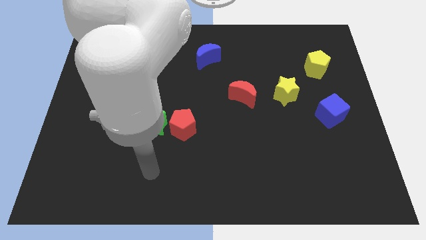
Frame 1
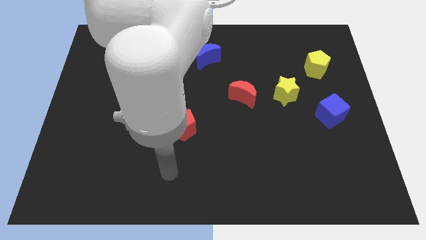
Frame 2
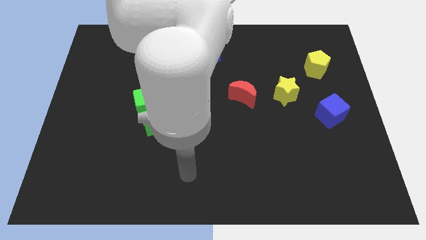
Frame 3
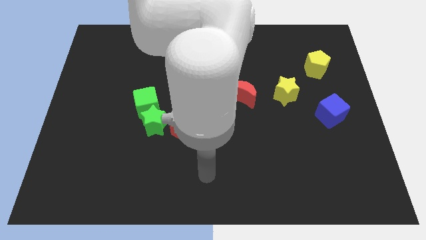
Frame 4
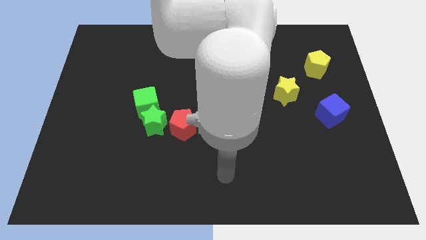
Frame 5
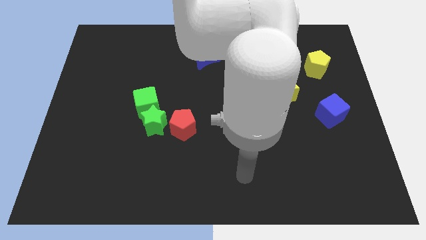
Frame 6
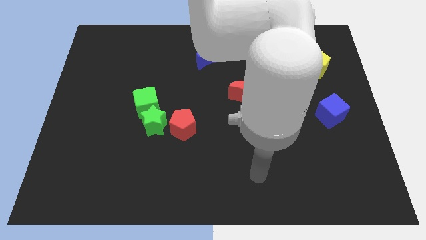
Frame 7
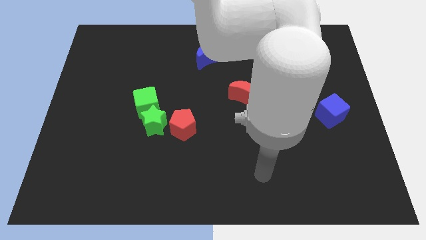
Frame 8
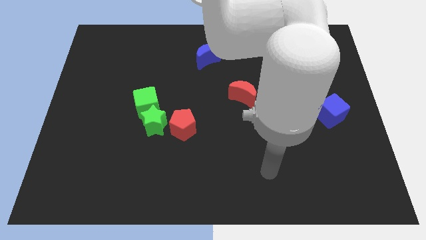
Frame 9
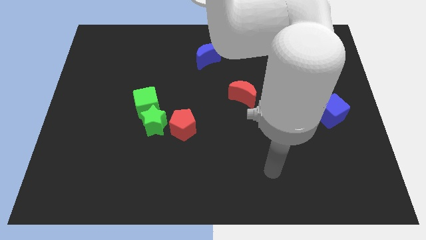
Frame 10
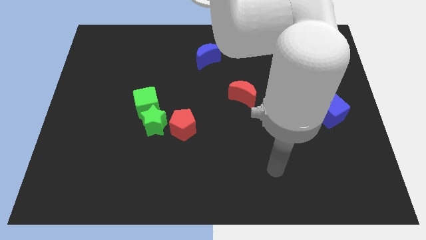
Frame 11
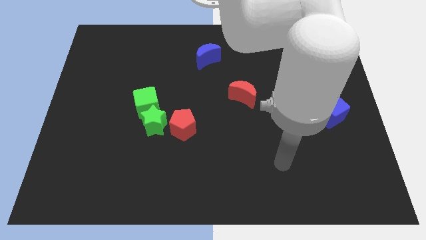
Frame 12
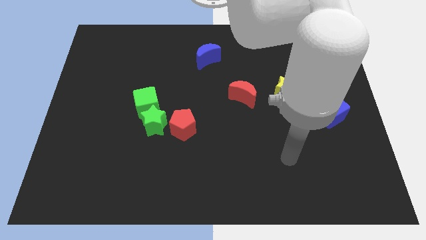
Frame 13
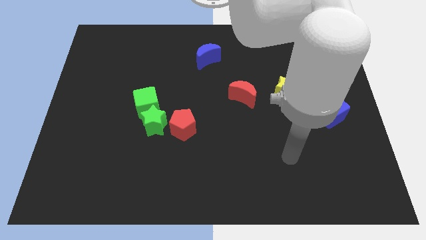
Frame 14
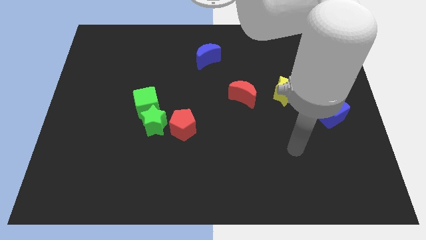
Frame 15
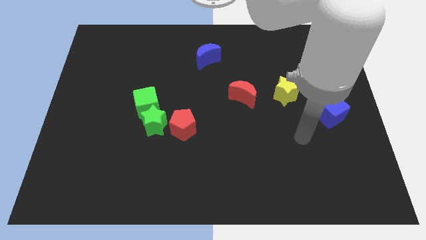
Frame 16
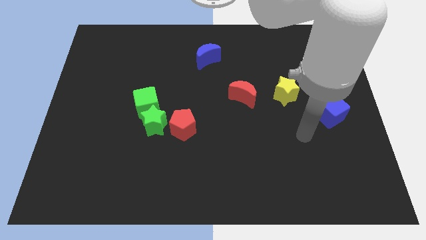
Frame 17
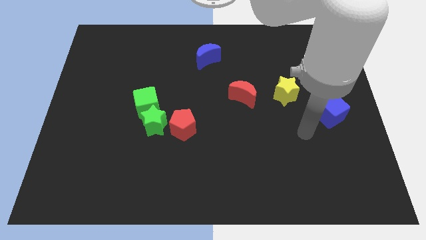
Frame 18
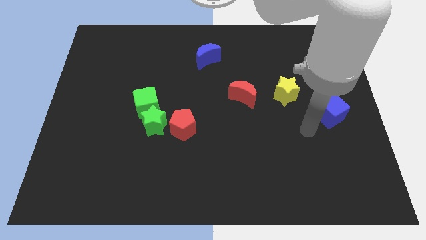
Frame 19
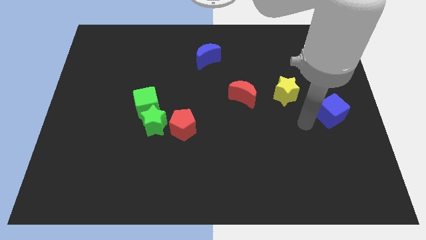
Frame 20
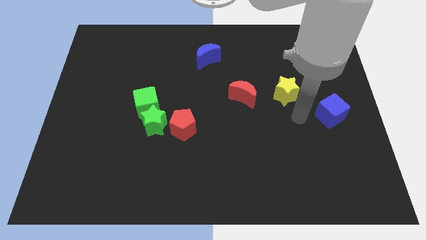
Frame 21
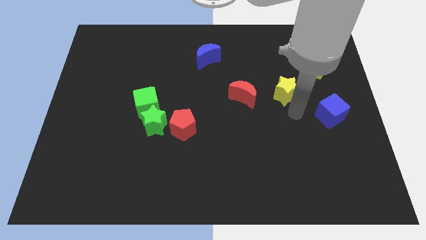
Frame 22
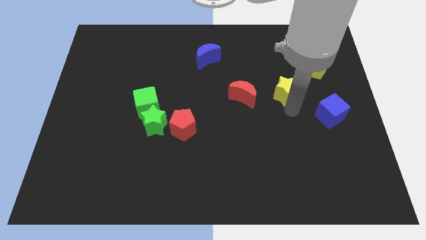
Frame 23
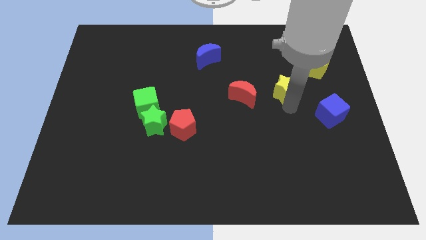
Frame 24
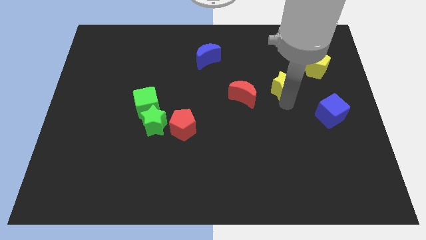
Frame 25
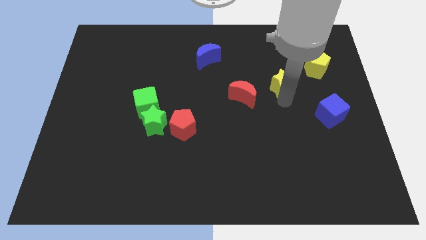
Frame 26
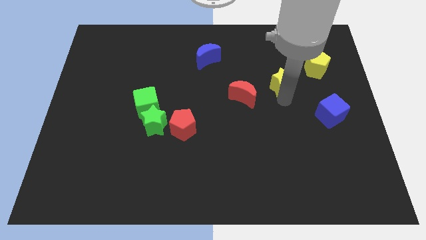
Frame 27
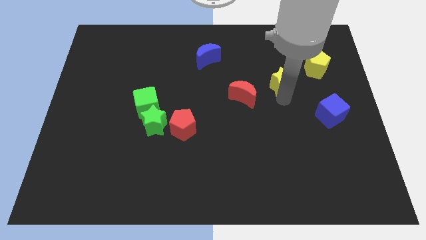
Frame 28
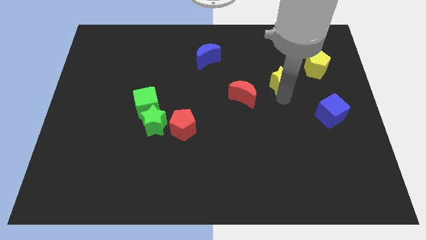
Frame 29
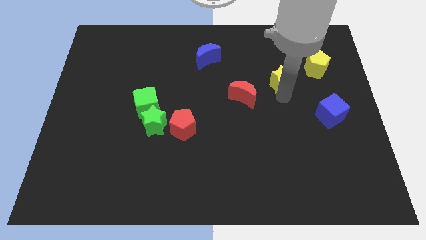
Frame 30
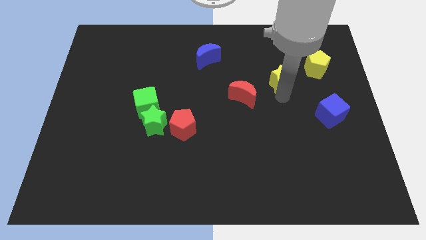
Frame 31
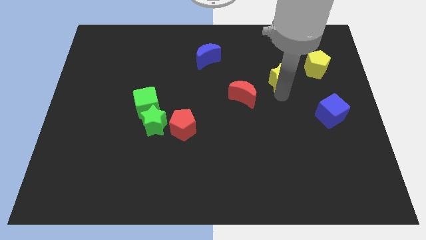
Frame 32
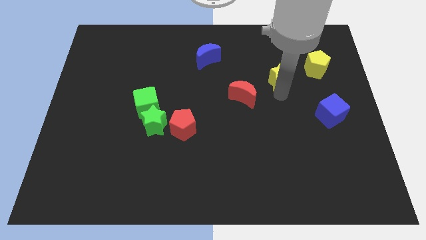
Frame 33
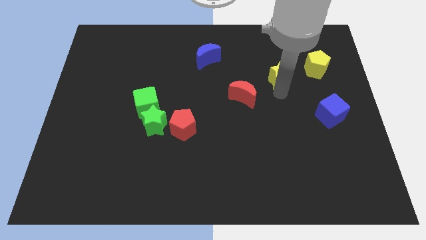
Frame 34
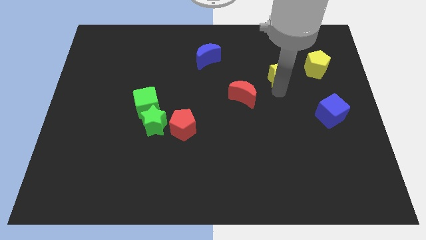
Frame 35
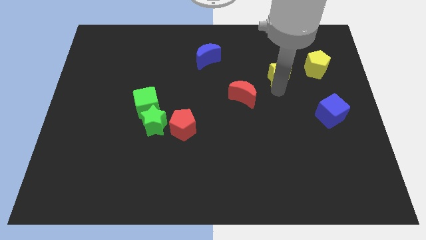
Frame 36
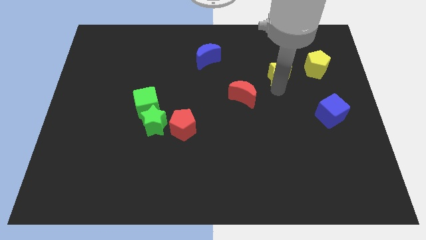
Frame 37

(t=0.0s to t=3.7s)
place the yellow star diagonally top right to the red moon

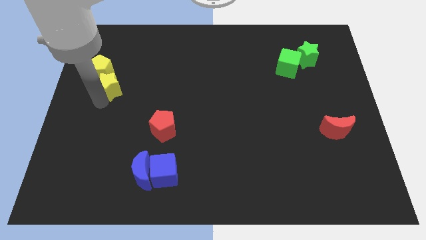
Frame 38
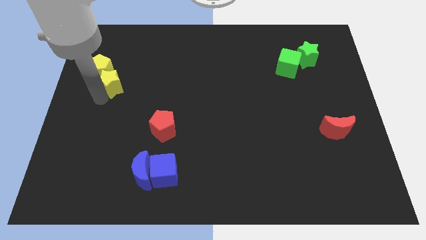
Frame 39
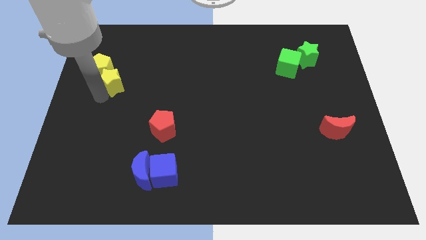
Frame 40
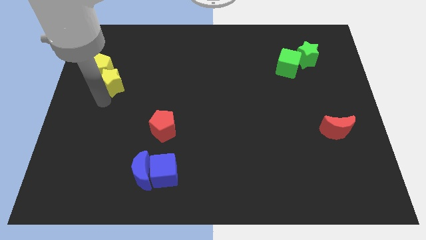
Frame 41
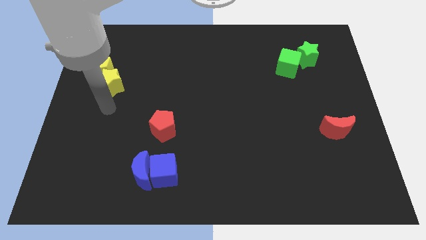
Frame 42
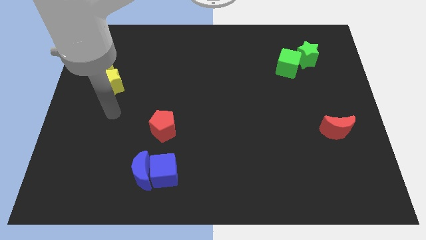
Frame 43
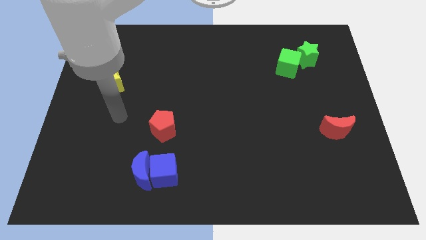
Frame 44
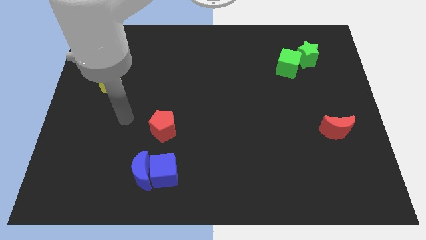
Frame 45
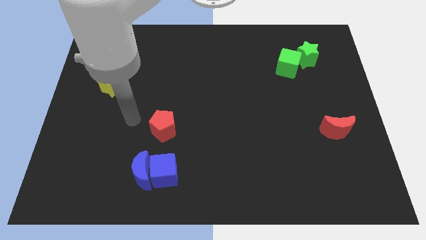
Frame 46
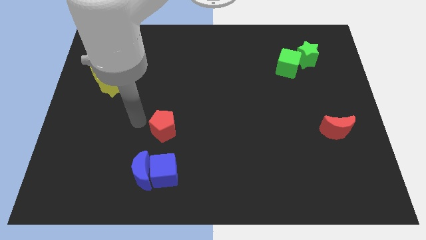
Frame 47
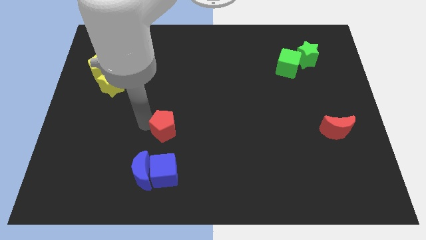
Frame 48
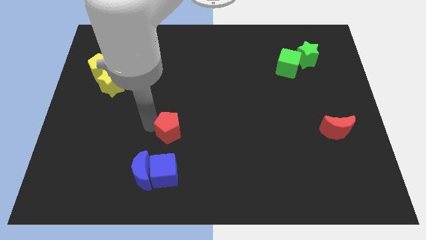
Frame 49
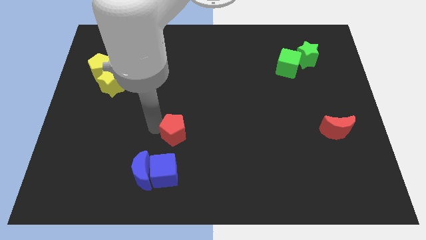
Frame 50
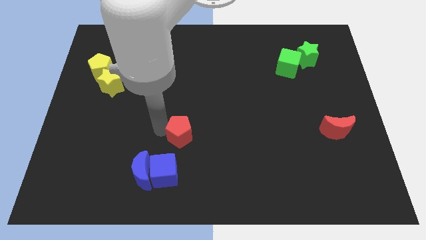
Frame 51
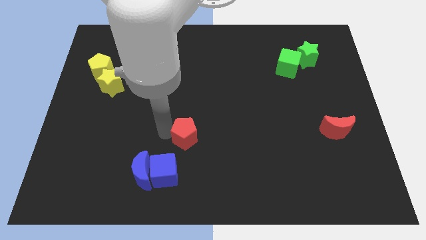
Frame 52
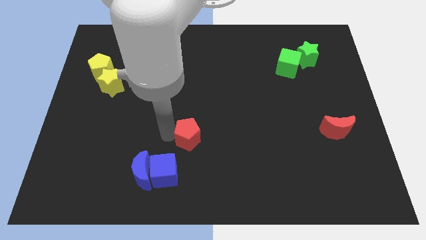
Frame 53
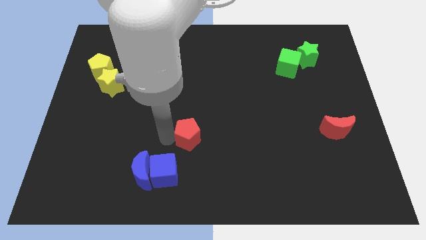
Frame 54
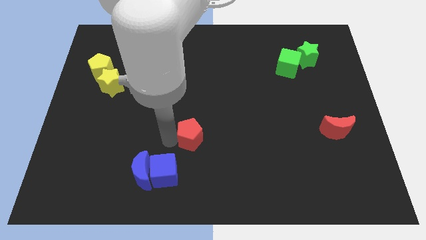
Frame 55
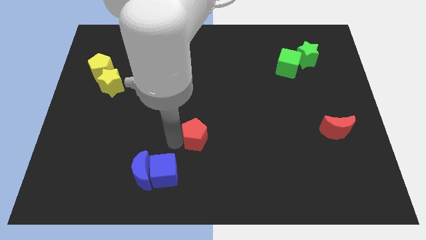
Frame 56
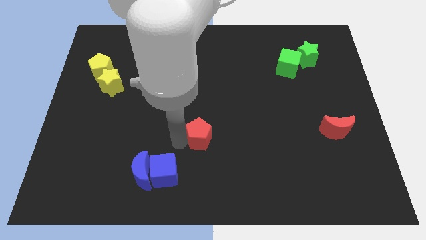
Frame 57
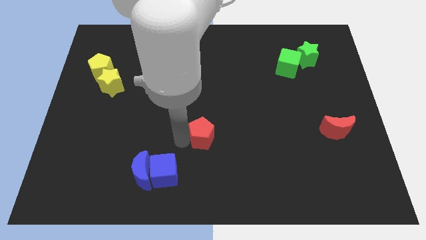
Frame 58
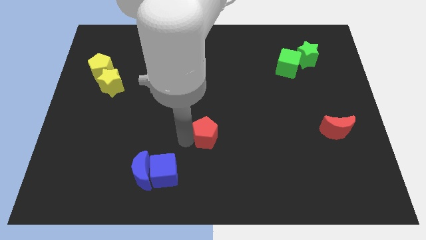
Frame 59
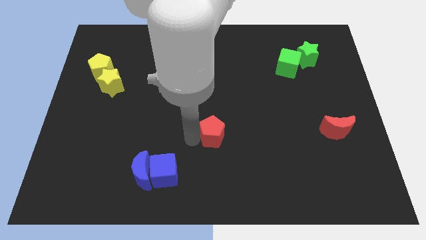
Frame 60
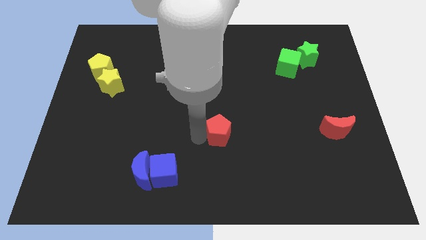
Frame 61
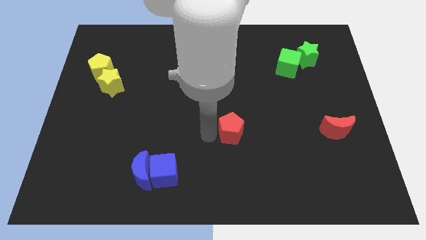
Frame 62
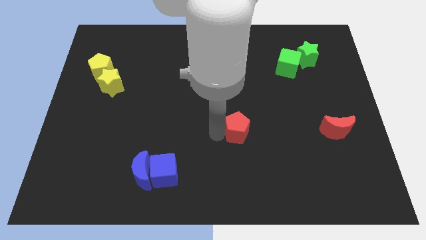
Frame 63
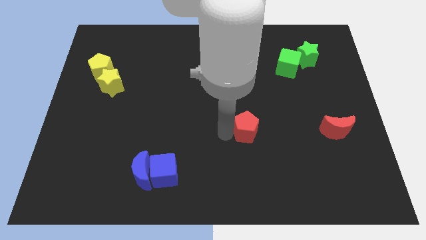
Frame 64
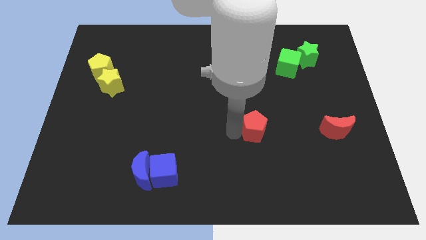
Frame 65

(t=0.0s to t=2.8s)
move the red pentagon horizontally to the left of the red moon

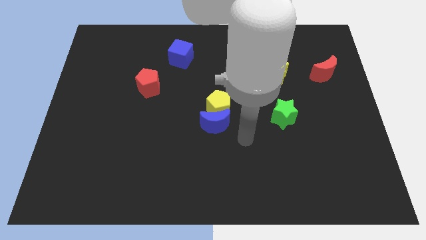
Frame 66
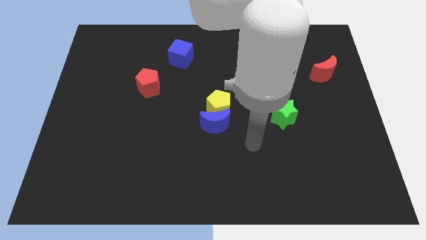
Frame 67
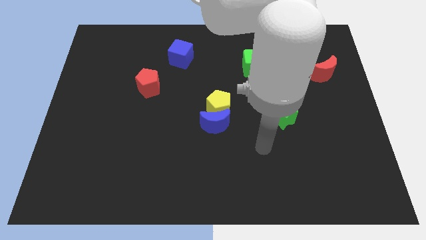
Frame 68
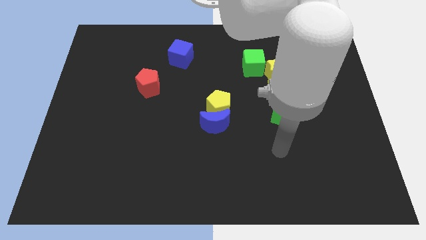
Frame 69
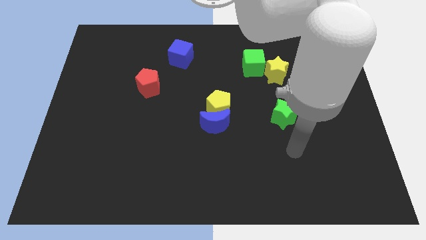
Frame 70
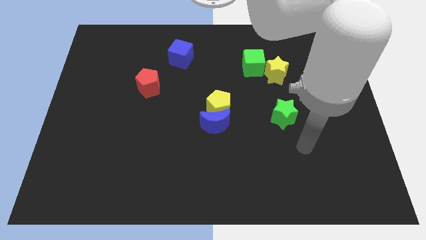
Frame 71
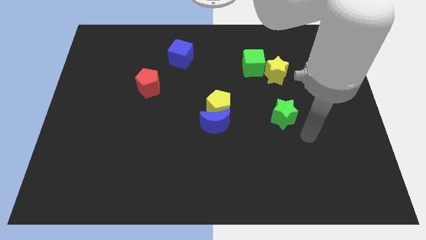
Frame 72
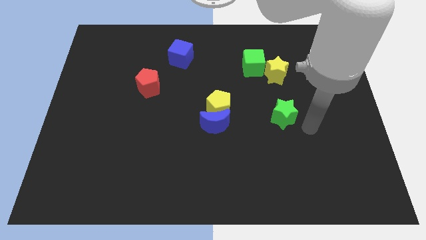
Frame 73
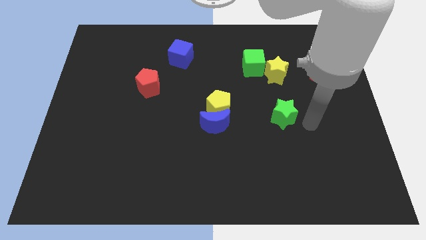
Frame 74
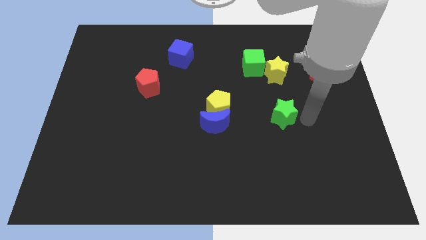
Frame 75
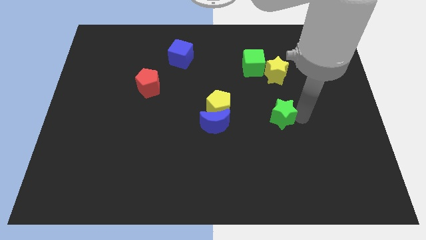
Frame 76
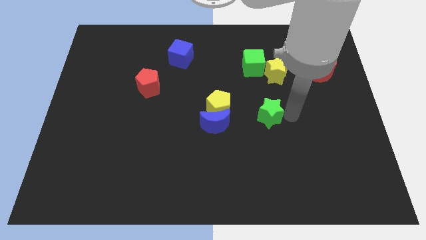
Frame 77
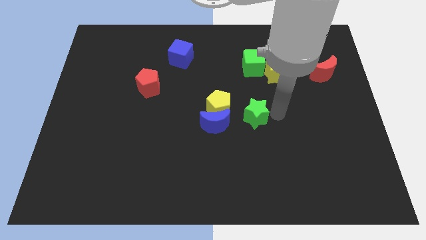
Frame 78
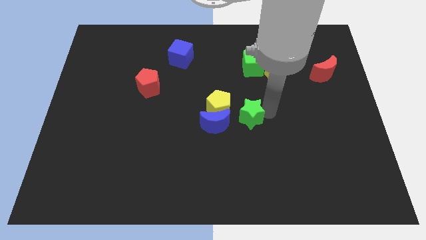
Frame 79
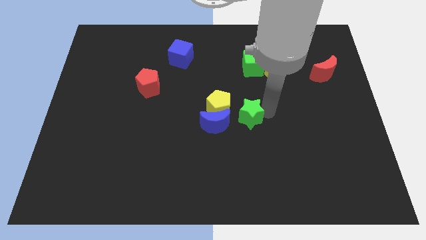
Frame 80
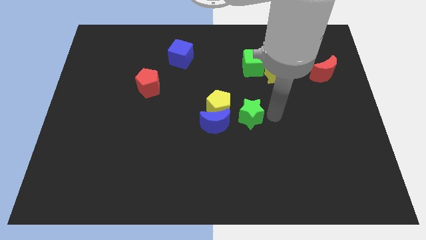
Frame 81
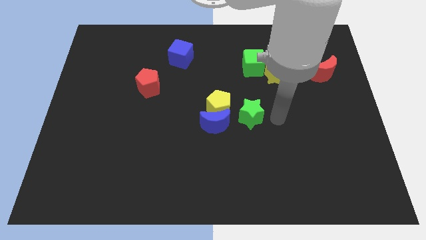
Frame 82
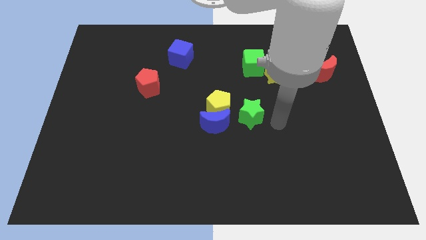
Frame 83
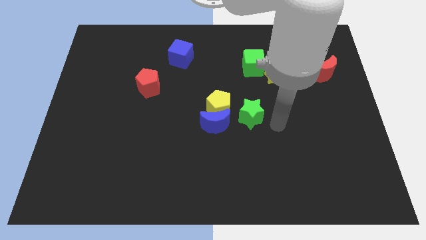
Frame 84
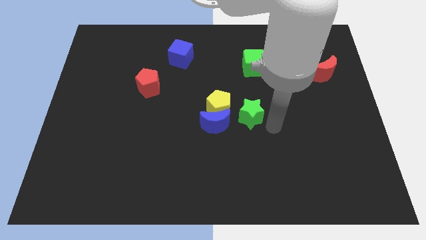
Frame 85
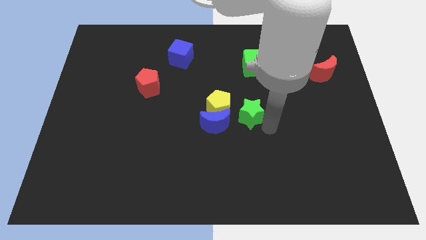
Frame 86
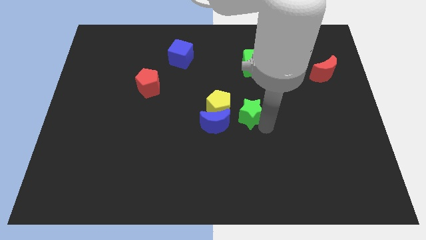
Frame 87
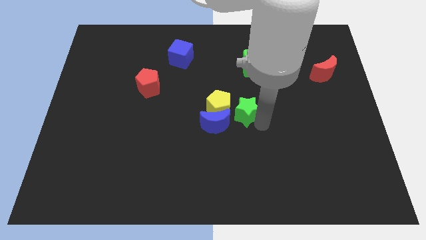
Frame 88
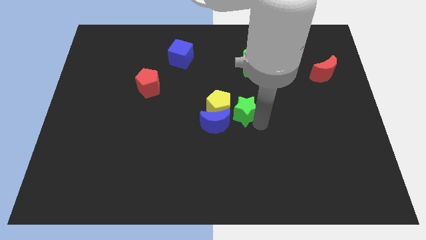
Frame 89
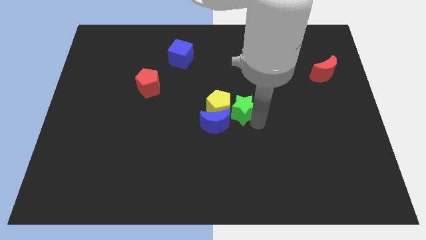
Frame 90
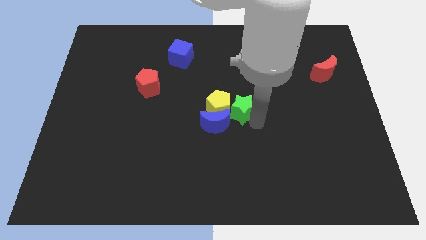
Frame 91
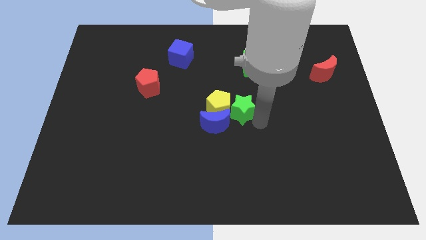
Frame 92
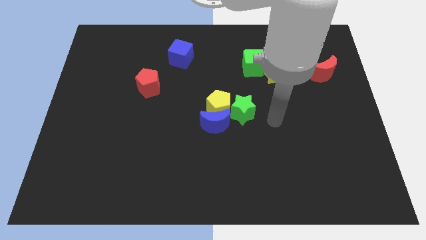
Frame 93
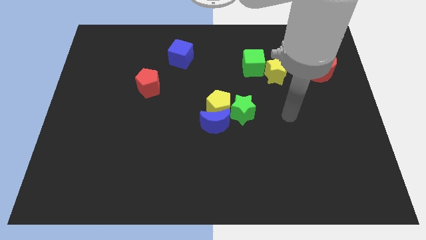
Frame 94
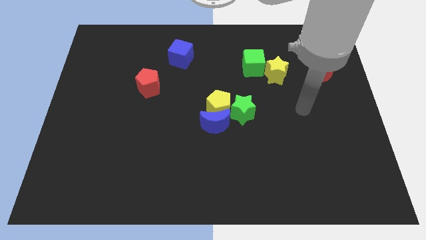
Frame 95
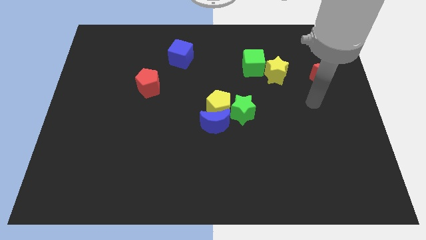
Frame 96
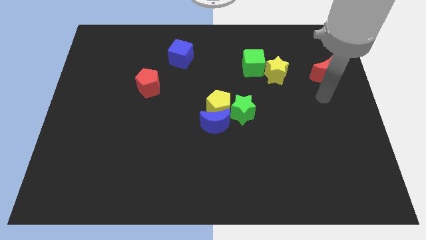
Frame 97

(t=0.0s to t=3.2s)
push green star to the right of yellow pentagon
